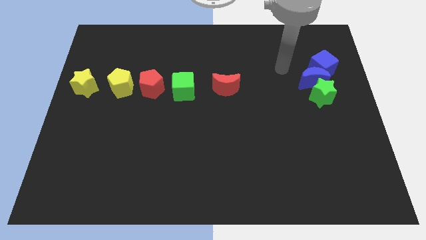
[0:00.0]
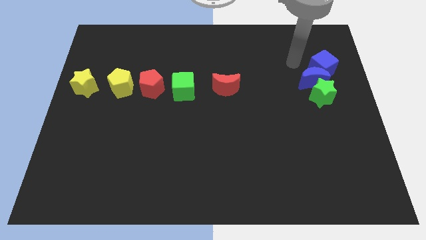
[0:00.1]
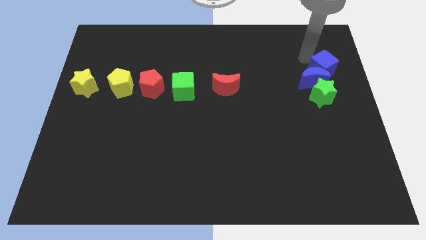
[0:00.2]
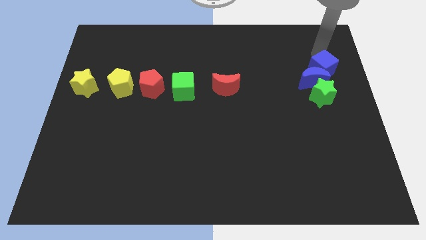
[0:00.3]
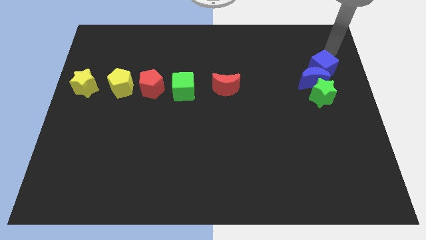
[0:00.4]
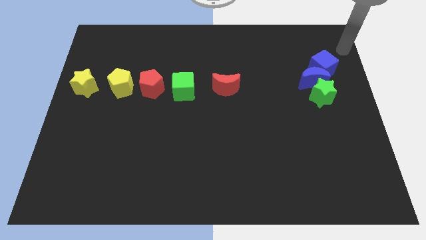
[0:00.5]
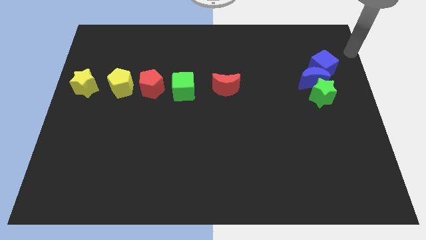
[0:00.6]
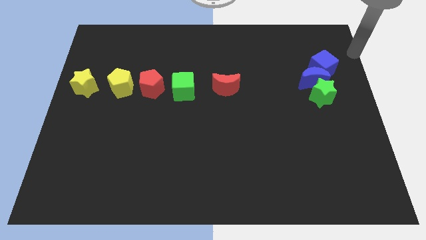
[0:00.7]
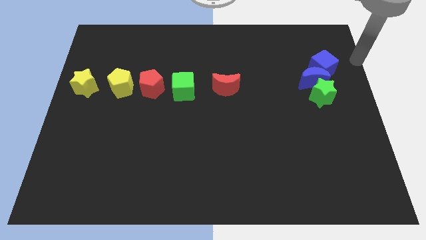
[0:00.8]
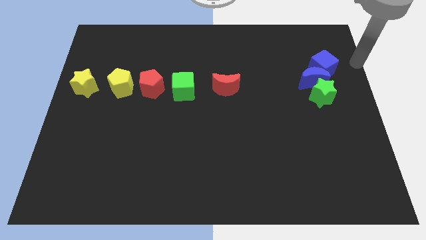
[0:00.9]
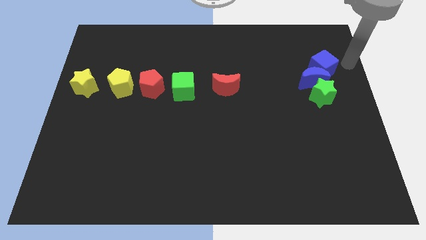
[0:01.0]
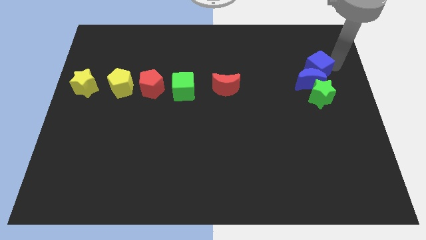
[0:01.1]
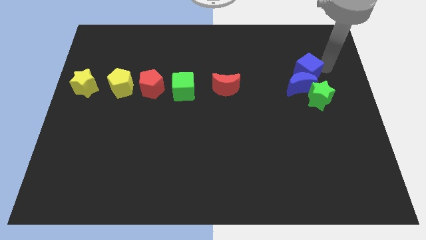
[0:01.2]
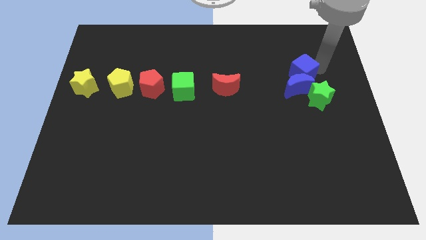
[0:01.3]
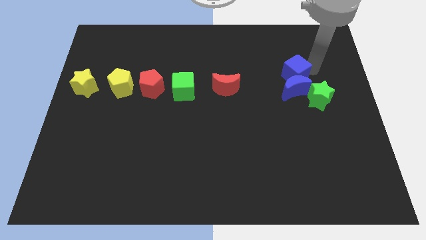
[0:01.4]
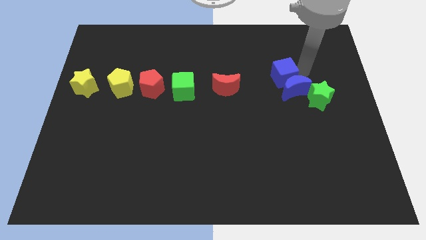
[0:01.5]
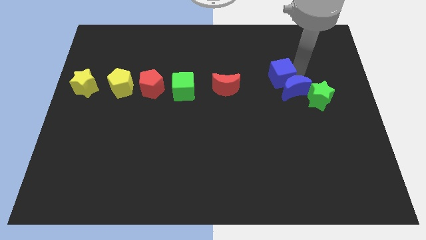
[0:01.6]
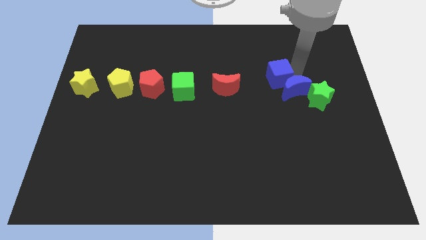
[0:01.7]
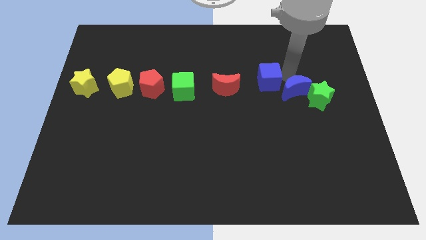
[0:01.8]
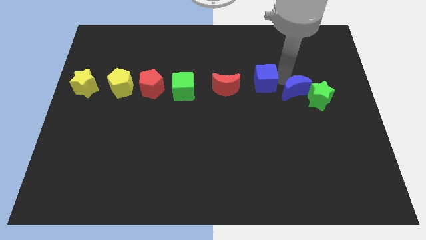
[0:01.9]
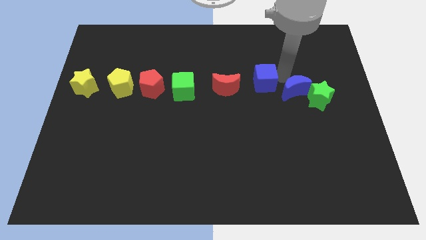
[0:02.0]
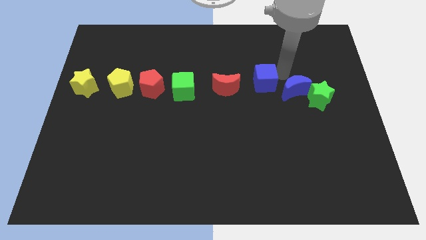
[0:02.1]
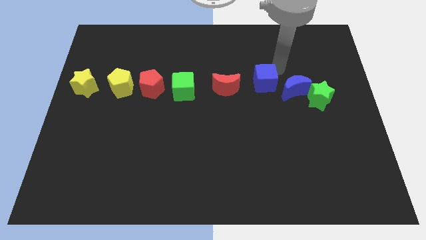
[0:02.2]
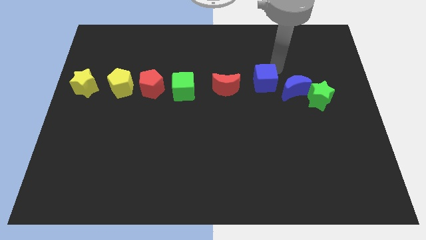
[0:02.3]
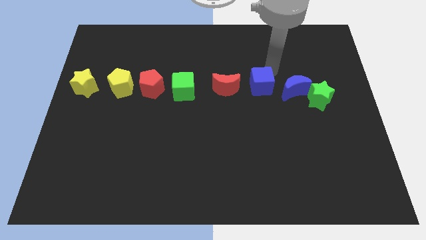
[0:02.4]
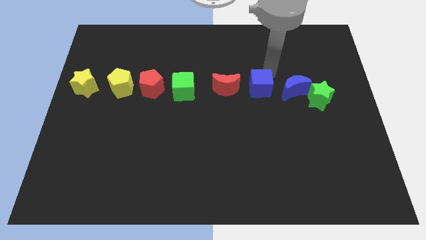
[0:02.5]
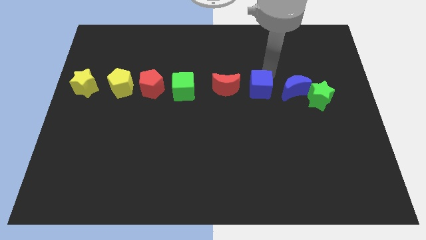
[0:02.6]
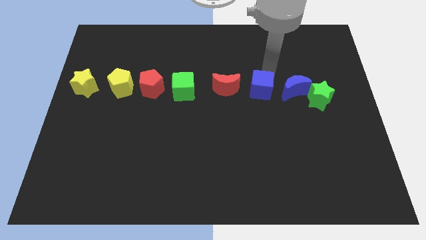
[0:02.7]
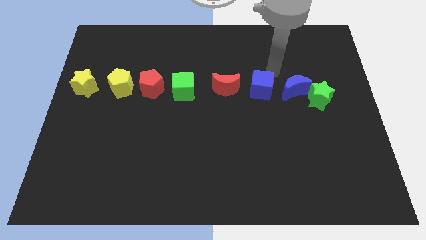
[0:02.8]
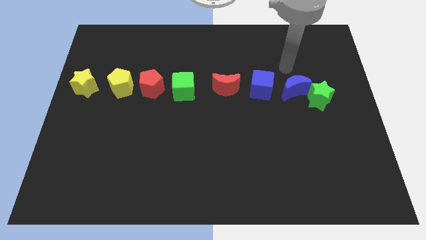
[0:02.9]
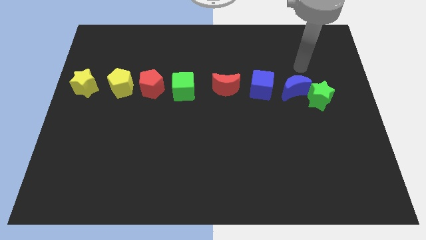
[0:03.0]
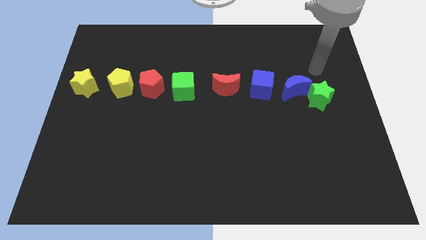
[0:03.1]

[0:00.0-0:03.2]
place your arm above blue crescent

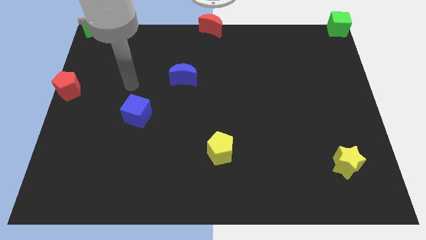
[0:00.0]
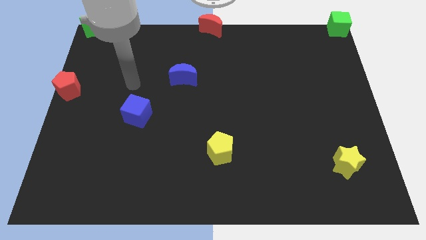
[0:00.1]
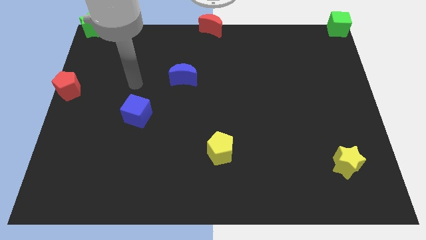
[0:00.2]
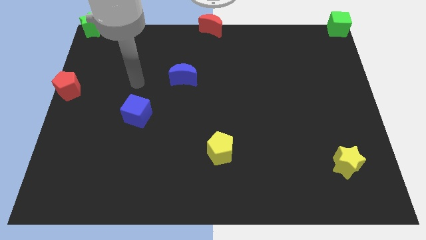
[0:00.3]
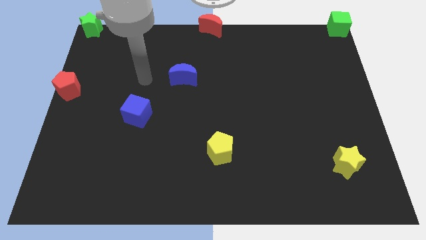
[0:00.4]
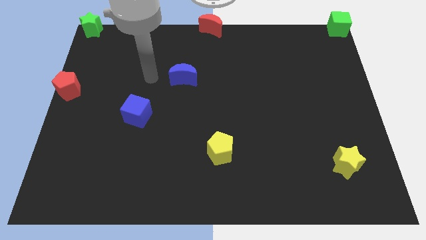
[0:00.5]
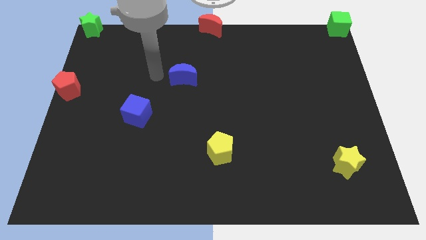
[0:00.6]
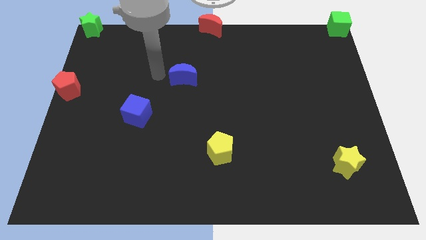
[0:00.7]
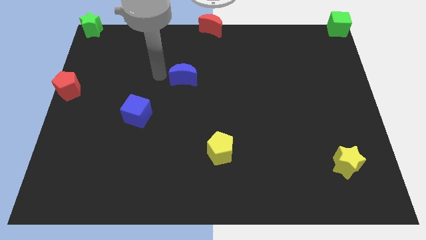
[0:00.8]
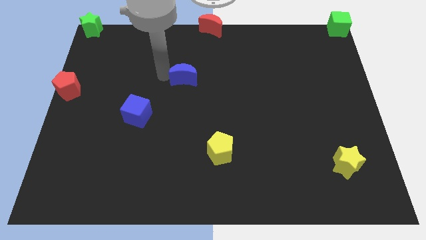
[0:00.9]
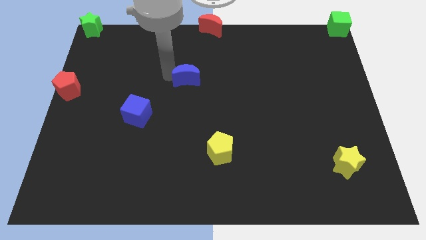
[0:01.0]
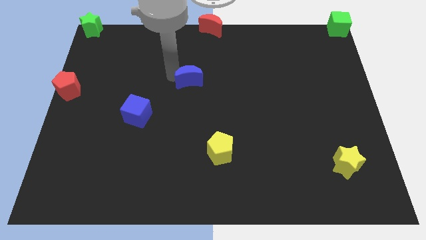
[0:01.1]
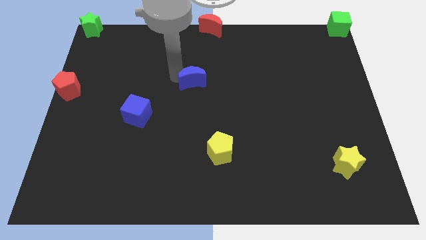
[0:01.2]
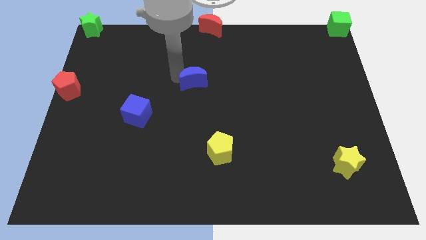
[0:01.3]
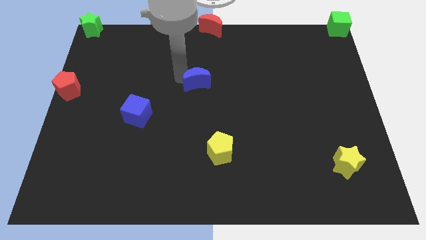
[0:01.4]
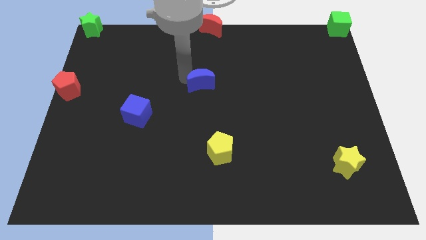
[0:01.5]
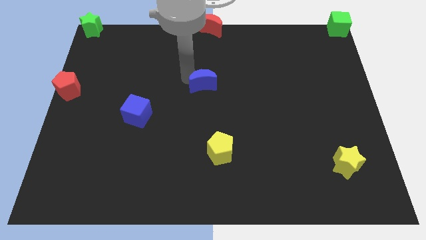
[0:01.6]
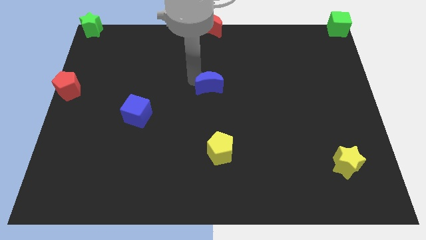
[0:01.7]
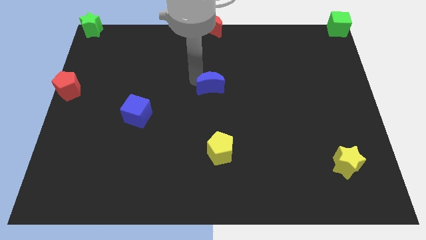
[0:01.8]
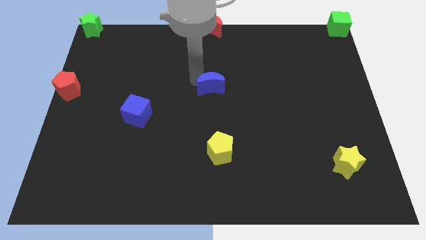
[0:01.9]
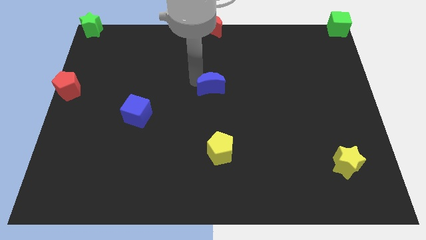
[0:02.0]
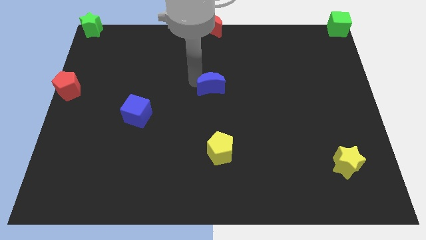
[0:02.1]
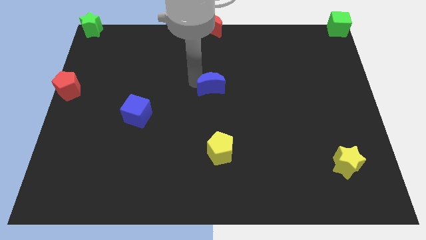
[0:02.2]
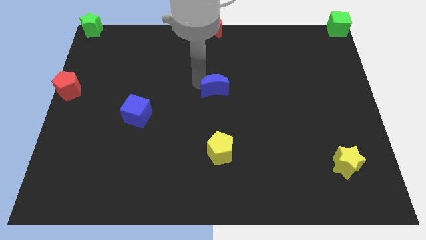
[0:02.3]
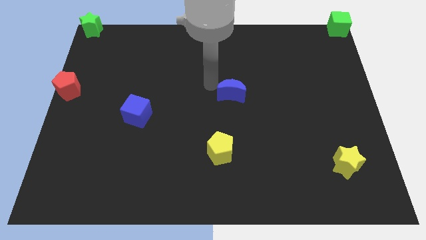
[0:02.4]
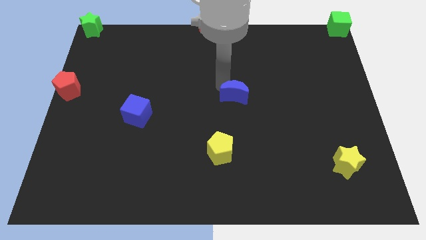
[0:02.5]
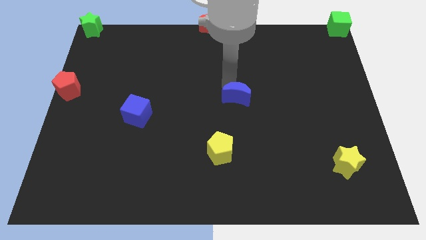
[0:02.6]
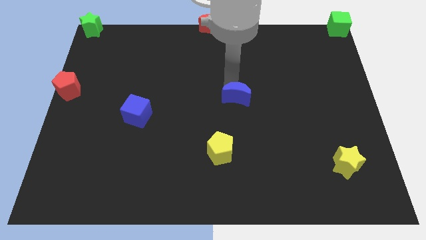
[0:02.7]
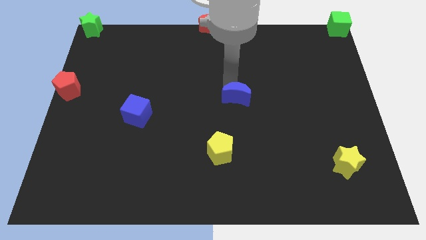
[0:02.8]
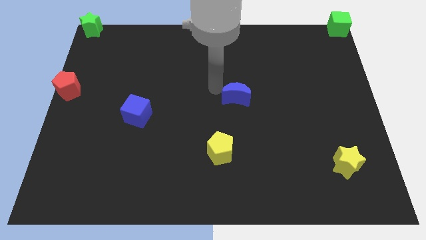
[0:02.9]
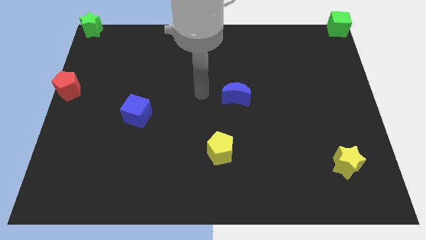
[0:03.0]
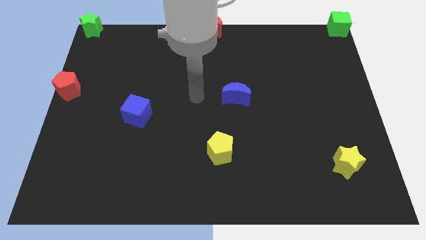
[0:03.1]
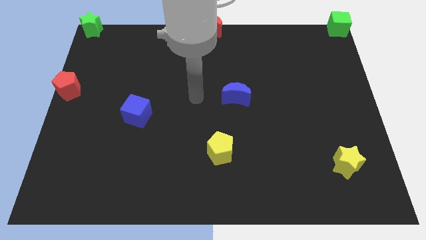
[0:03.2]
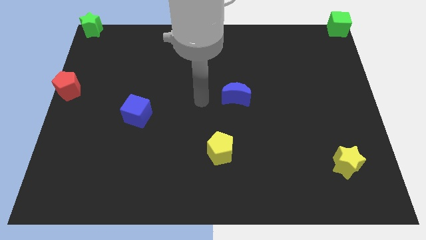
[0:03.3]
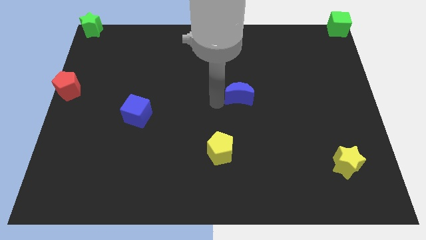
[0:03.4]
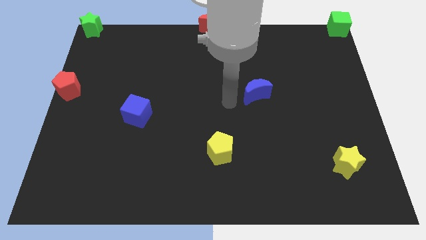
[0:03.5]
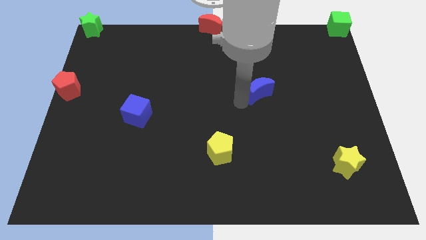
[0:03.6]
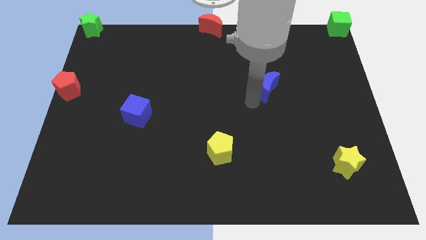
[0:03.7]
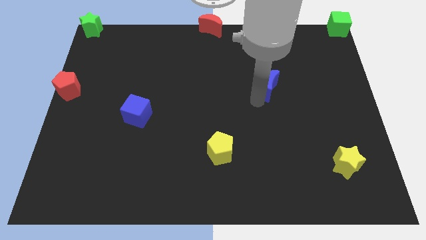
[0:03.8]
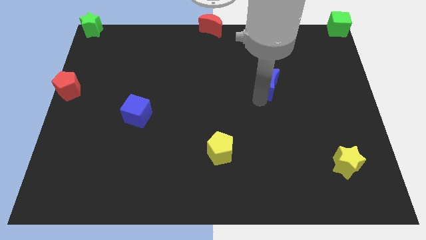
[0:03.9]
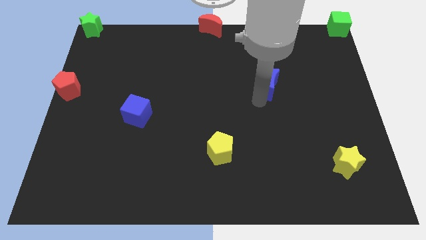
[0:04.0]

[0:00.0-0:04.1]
move the blue crescent to the top right of the yellow pentagon diagonally right

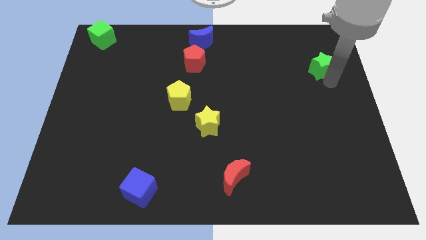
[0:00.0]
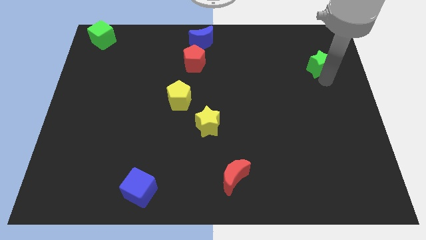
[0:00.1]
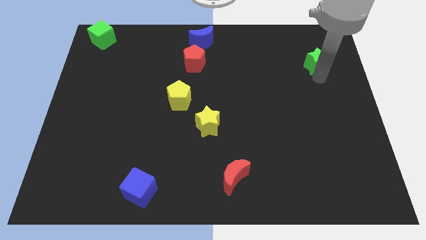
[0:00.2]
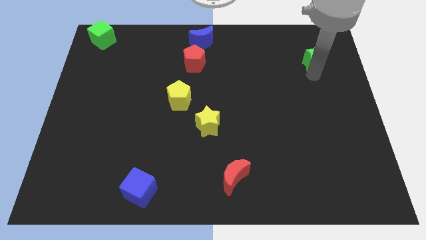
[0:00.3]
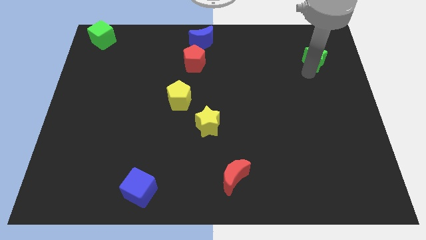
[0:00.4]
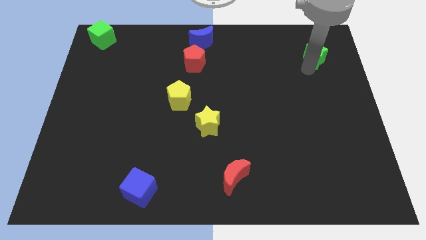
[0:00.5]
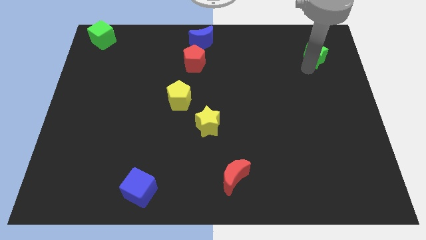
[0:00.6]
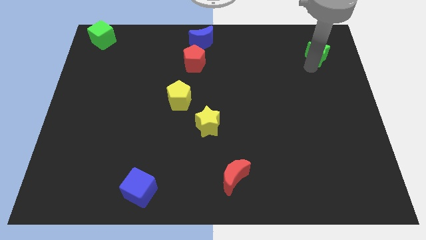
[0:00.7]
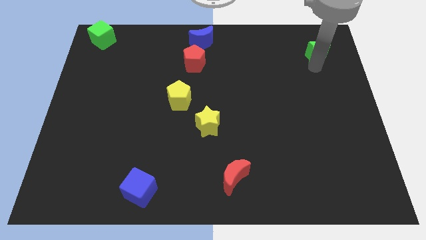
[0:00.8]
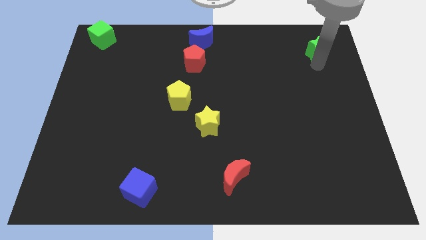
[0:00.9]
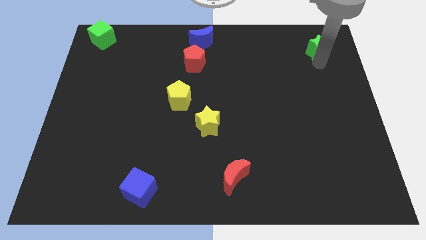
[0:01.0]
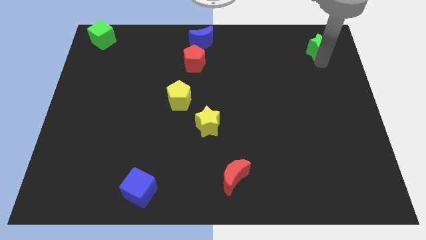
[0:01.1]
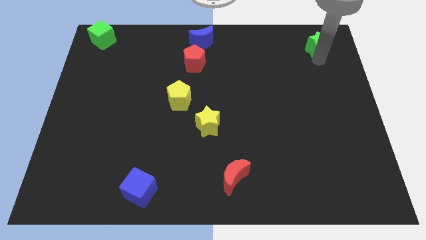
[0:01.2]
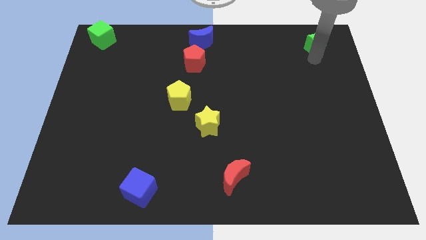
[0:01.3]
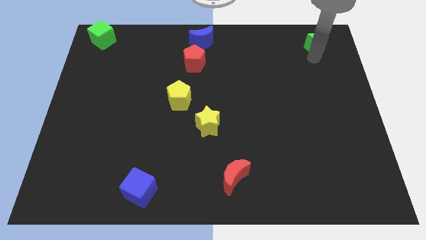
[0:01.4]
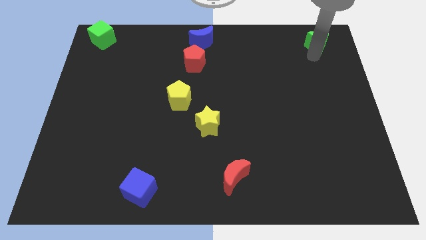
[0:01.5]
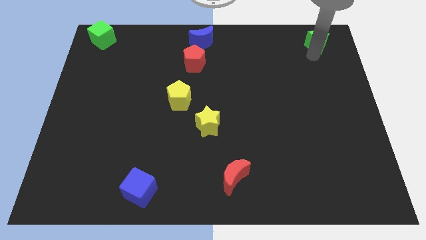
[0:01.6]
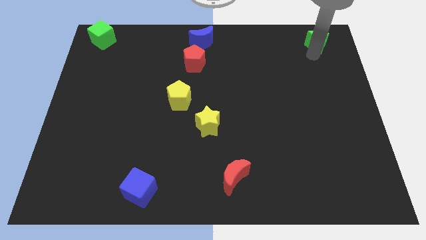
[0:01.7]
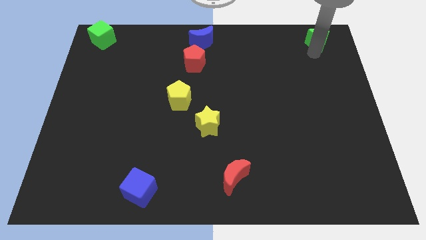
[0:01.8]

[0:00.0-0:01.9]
put the green star parallel to blue moon
